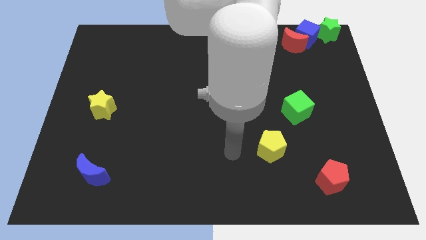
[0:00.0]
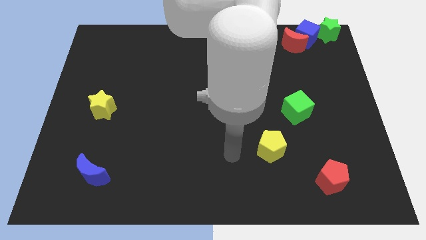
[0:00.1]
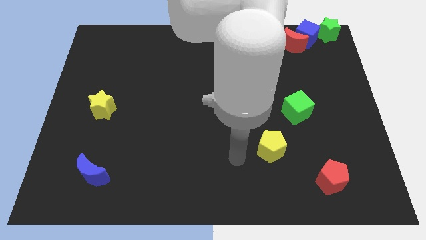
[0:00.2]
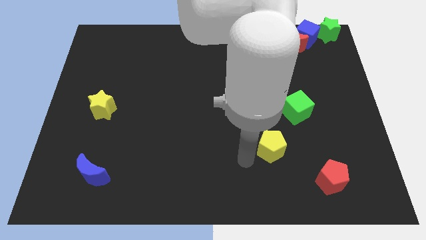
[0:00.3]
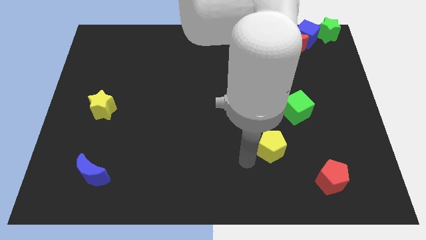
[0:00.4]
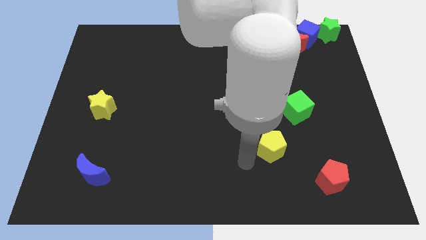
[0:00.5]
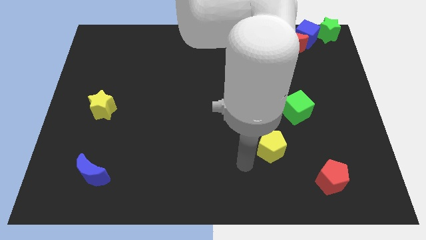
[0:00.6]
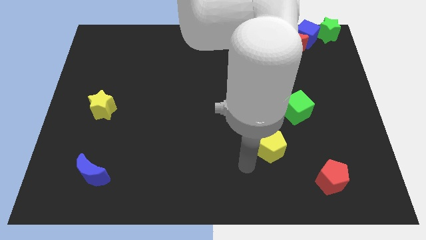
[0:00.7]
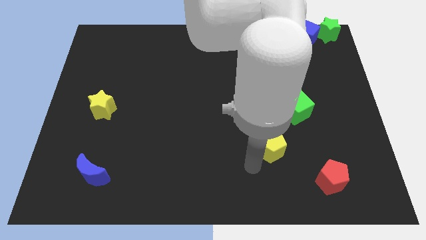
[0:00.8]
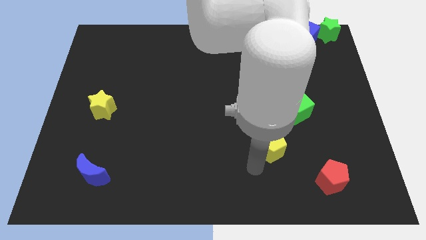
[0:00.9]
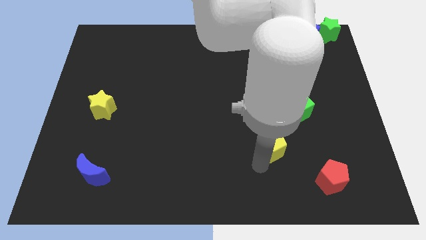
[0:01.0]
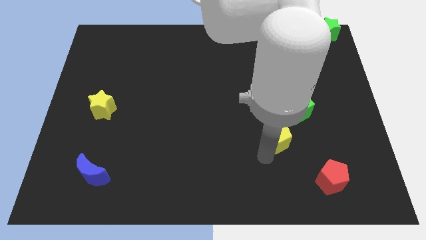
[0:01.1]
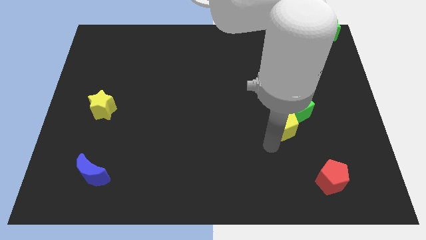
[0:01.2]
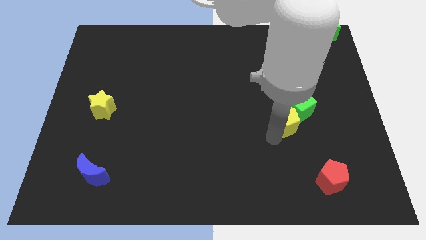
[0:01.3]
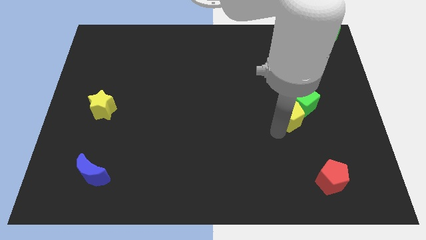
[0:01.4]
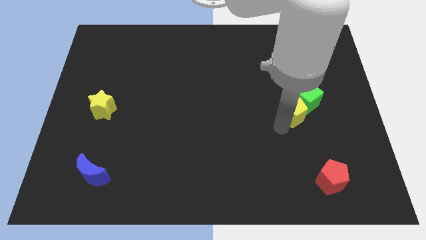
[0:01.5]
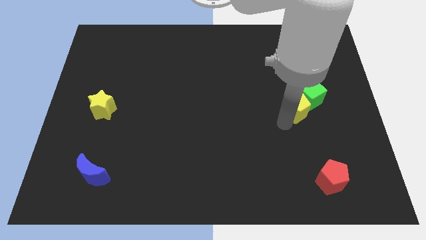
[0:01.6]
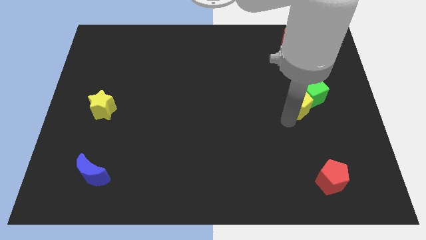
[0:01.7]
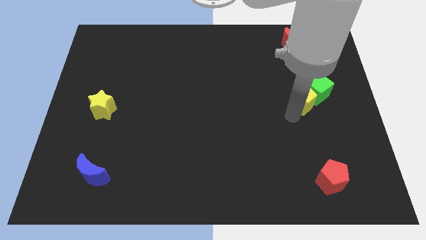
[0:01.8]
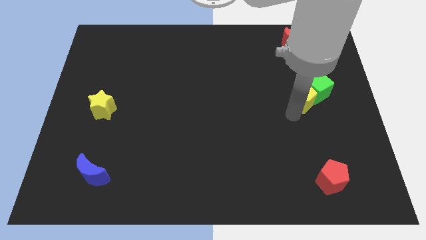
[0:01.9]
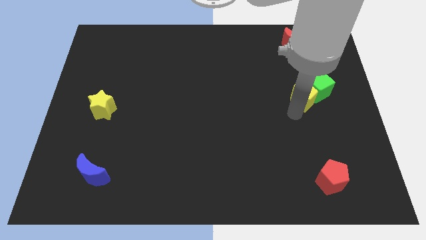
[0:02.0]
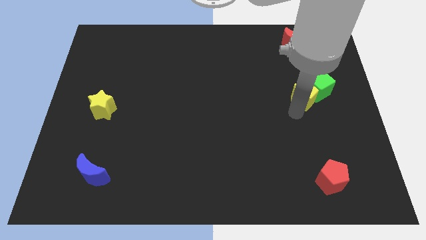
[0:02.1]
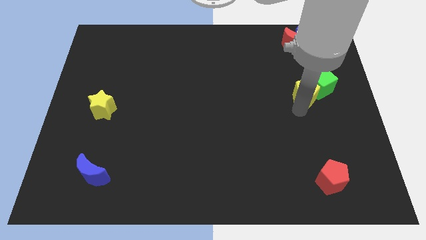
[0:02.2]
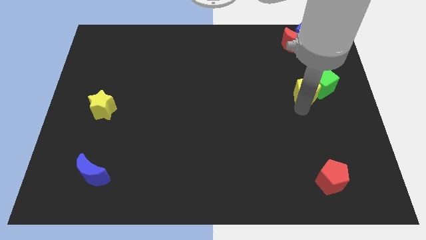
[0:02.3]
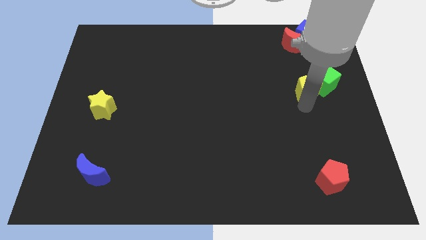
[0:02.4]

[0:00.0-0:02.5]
push yellow pentagon below red crescent

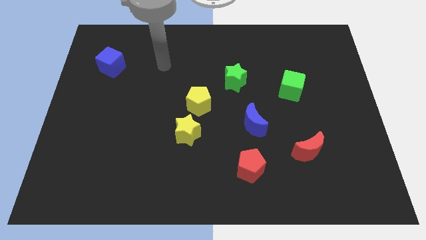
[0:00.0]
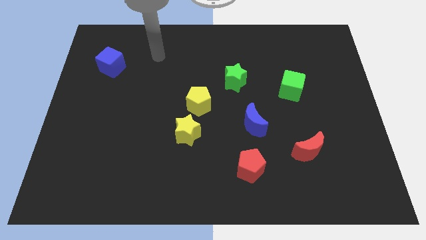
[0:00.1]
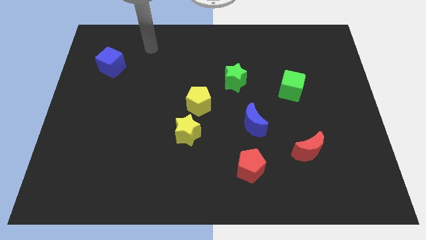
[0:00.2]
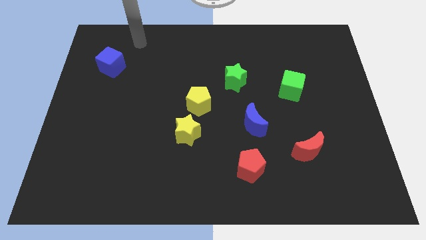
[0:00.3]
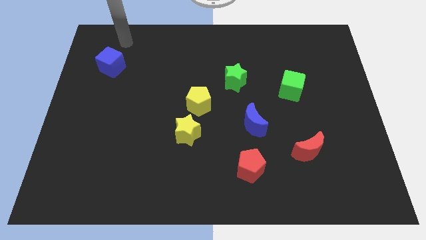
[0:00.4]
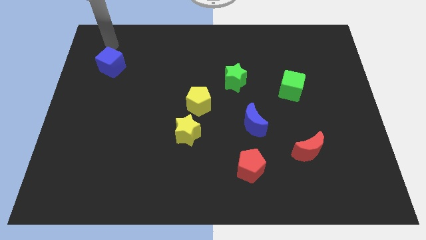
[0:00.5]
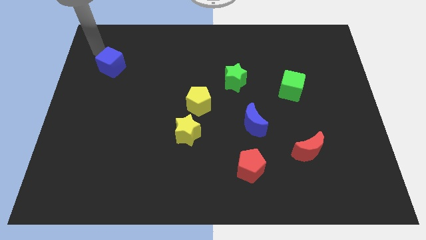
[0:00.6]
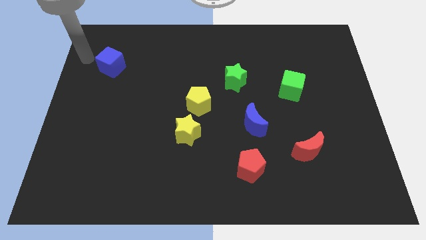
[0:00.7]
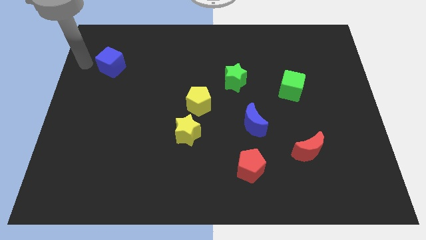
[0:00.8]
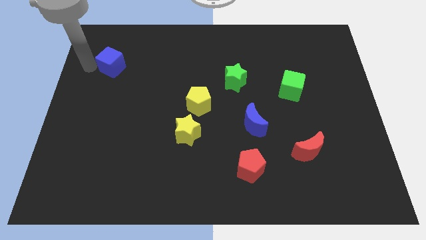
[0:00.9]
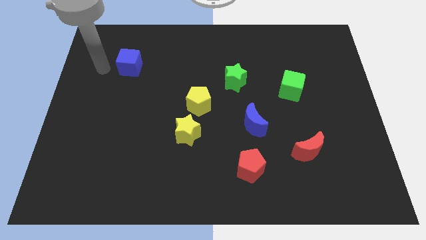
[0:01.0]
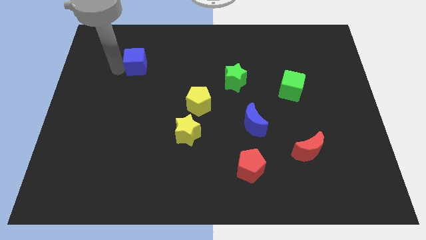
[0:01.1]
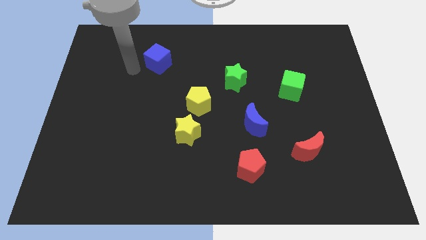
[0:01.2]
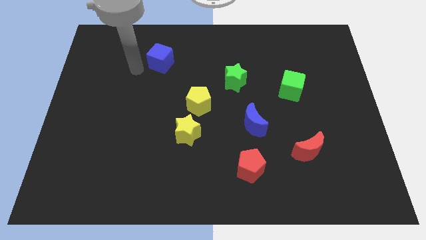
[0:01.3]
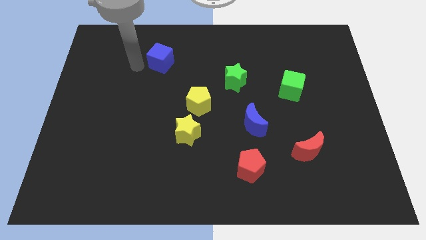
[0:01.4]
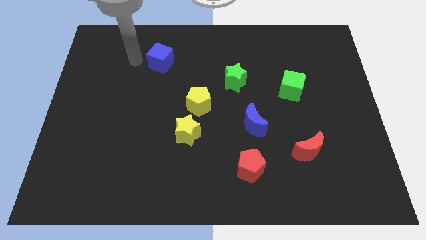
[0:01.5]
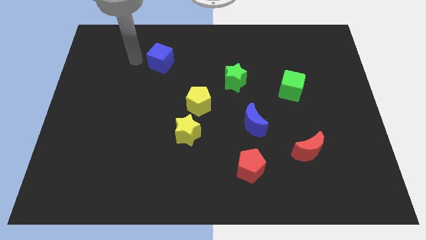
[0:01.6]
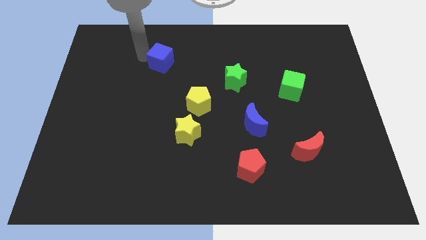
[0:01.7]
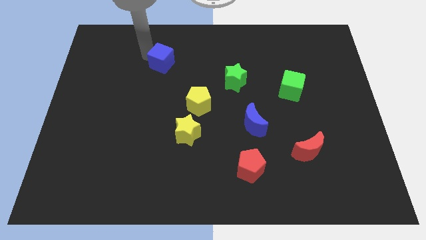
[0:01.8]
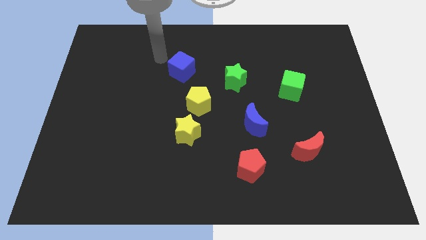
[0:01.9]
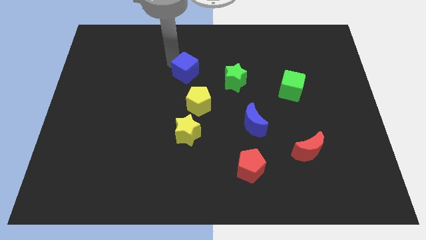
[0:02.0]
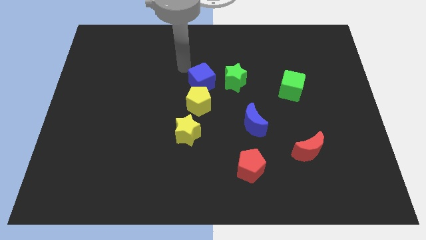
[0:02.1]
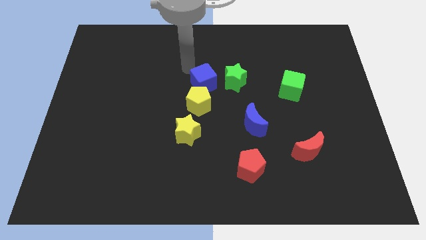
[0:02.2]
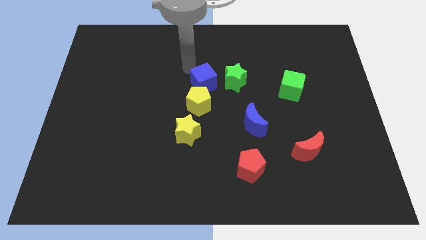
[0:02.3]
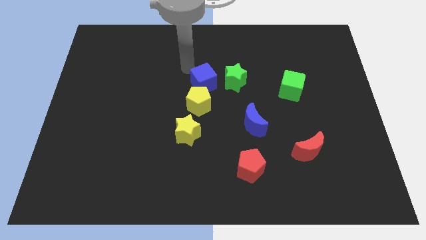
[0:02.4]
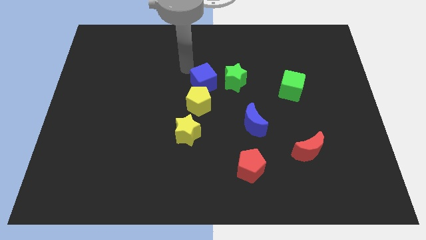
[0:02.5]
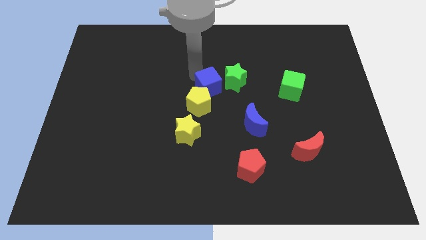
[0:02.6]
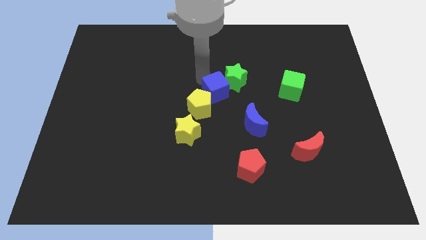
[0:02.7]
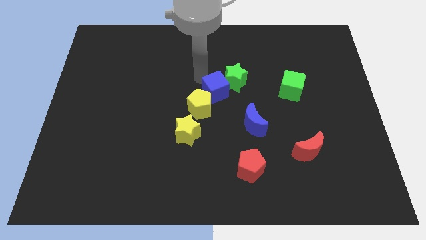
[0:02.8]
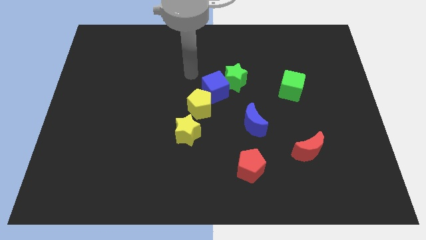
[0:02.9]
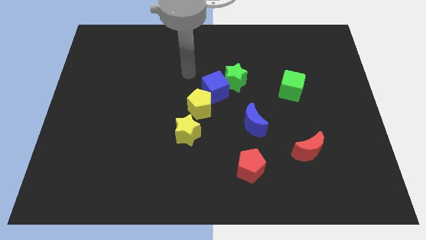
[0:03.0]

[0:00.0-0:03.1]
push the blue cube to the left bottom of the green star

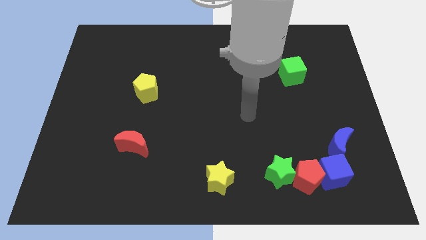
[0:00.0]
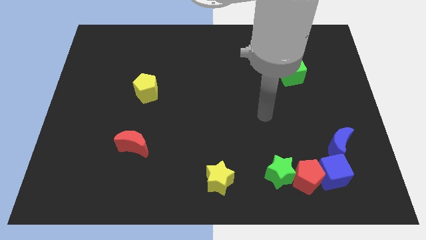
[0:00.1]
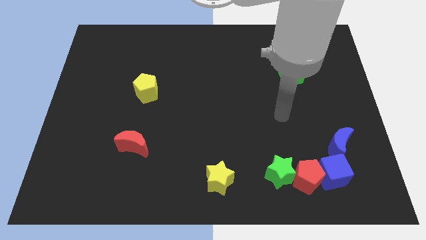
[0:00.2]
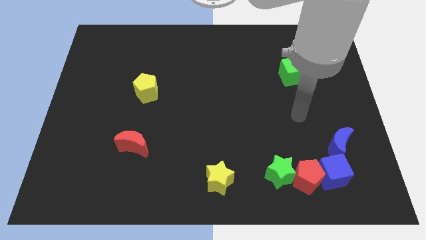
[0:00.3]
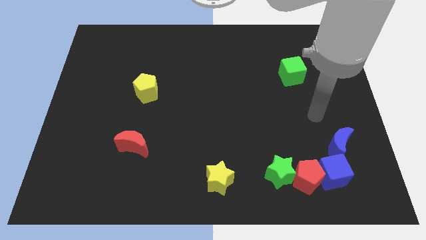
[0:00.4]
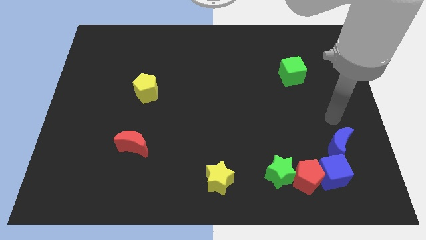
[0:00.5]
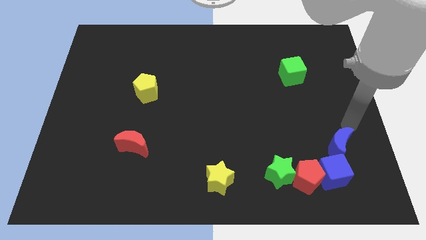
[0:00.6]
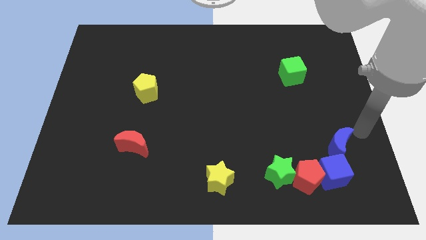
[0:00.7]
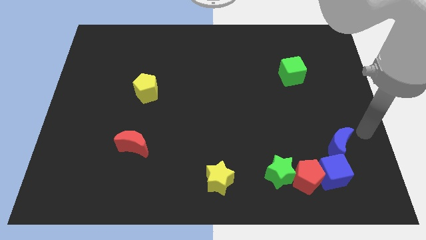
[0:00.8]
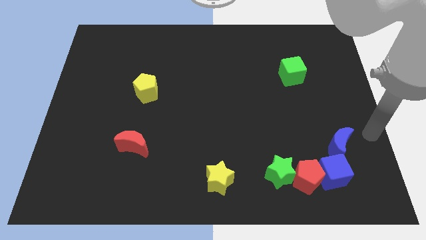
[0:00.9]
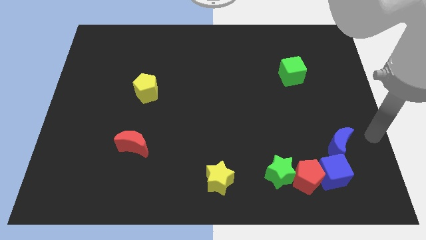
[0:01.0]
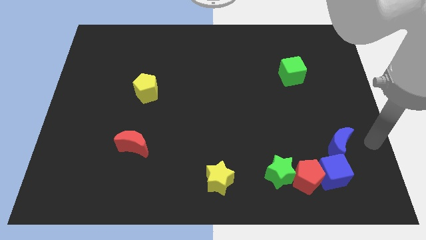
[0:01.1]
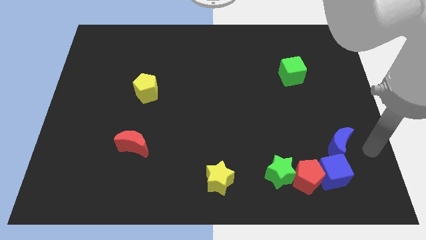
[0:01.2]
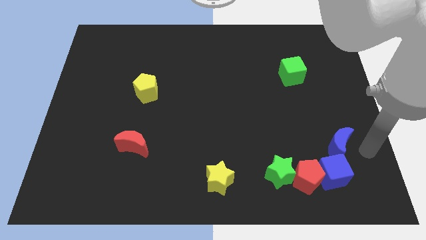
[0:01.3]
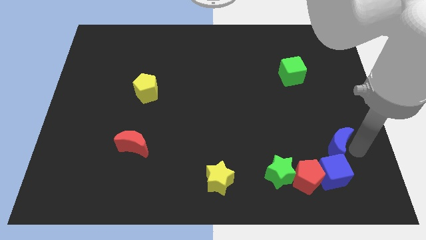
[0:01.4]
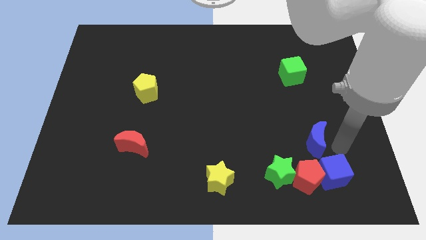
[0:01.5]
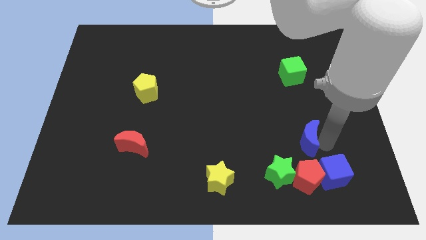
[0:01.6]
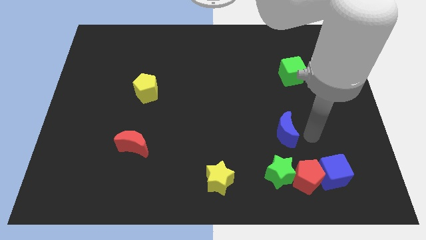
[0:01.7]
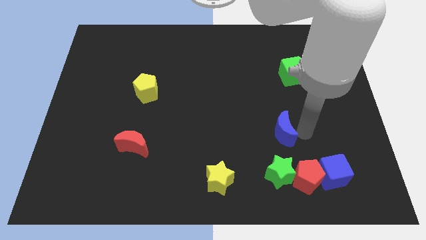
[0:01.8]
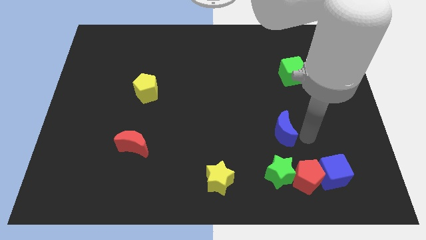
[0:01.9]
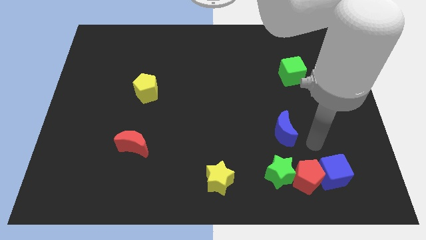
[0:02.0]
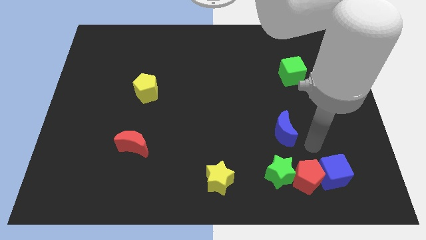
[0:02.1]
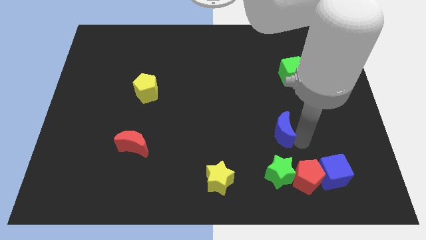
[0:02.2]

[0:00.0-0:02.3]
push the blue moon on top of green star

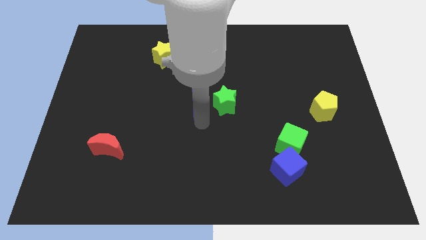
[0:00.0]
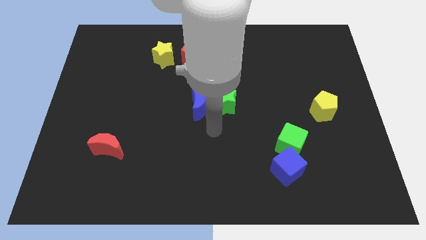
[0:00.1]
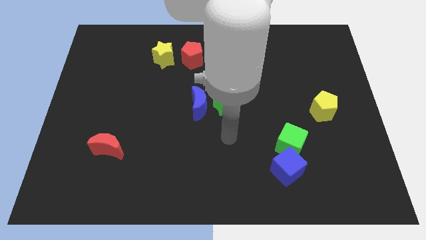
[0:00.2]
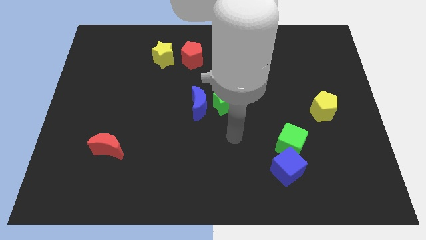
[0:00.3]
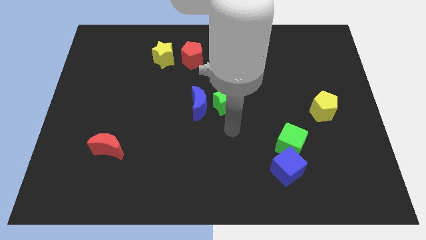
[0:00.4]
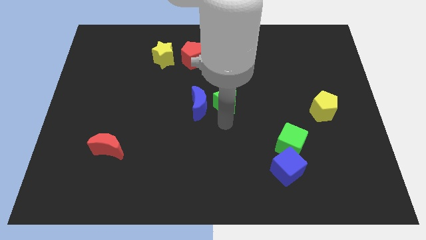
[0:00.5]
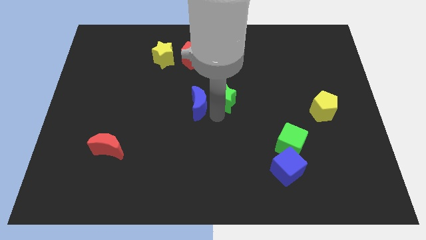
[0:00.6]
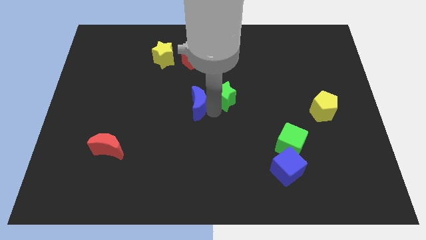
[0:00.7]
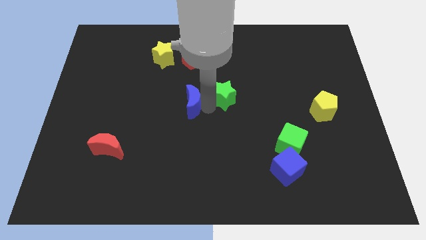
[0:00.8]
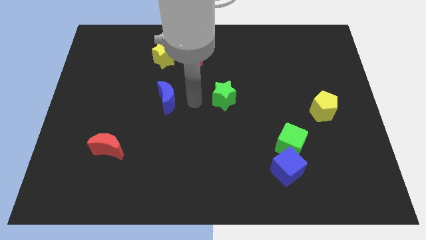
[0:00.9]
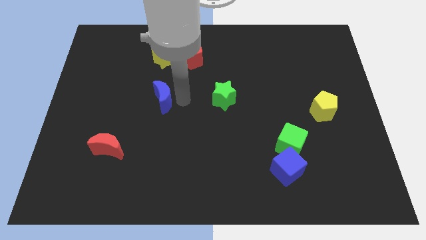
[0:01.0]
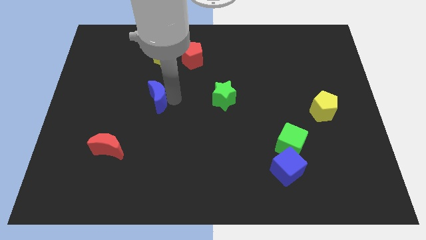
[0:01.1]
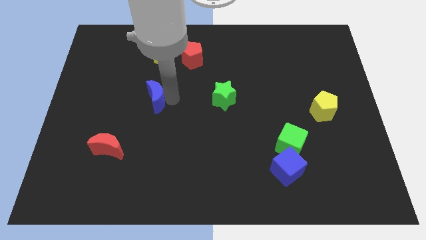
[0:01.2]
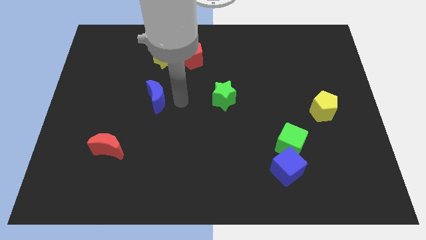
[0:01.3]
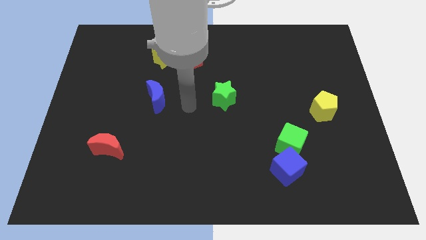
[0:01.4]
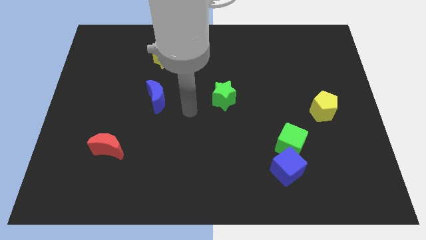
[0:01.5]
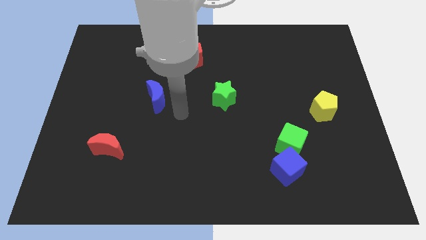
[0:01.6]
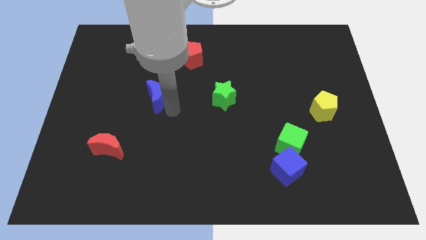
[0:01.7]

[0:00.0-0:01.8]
push blue crescent towards the left side of the board
